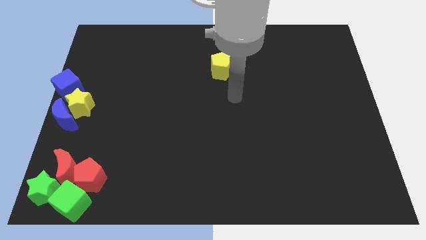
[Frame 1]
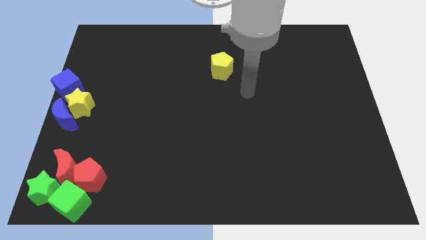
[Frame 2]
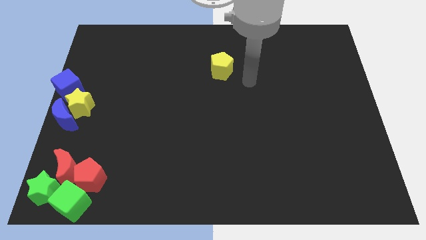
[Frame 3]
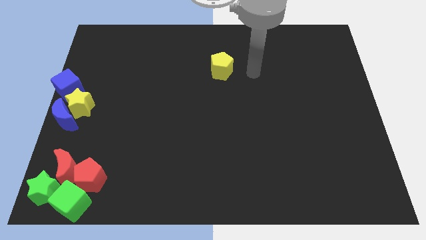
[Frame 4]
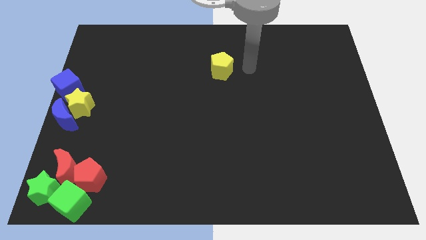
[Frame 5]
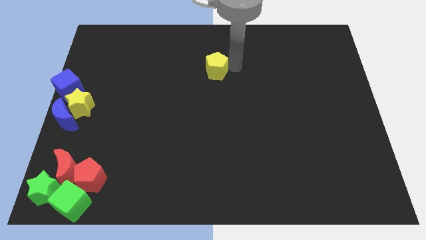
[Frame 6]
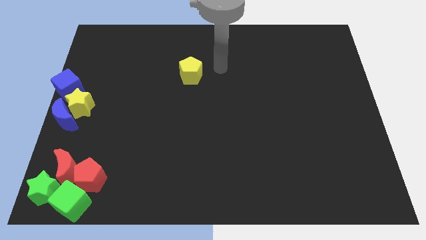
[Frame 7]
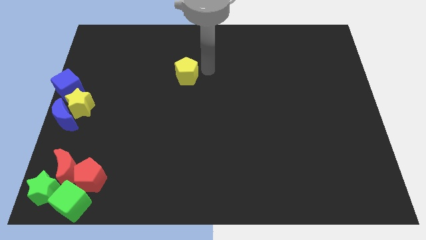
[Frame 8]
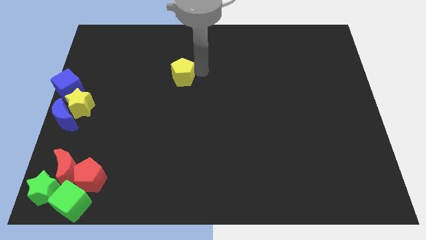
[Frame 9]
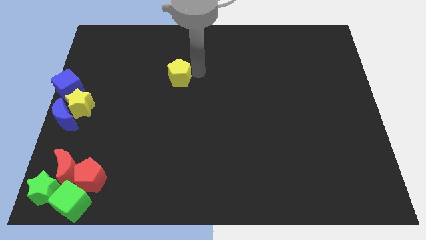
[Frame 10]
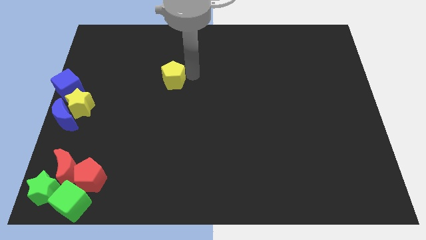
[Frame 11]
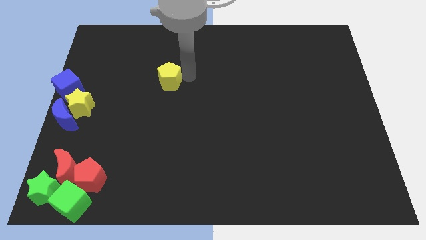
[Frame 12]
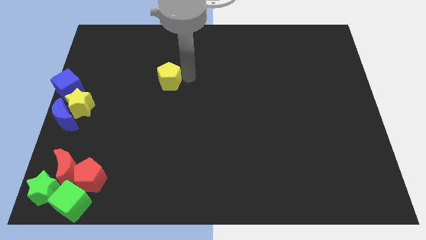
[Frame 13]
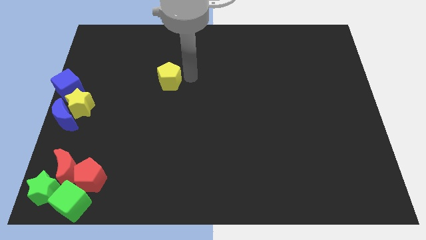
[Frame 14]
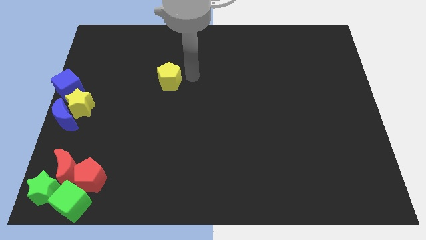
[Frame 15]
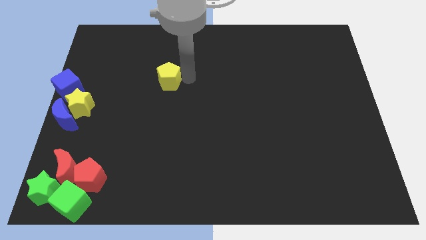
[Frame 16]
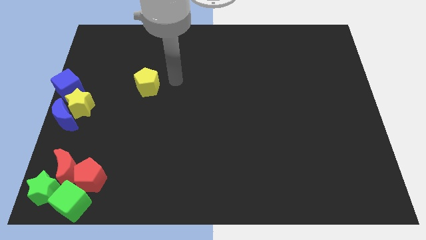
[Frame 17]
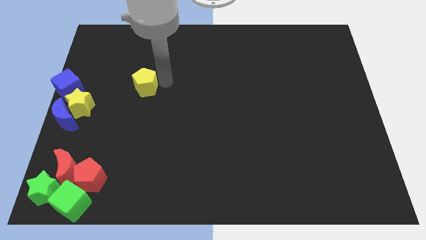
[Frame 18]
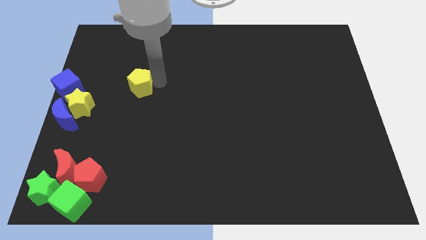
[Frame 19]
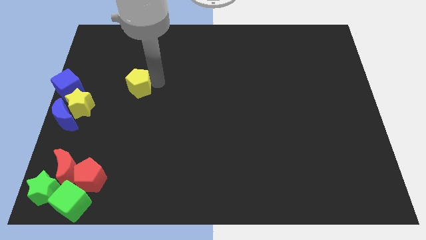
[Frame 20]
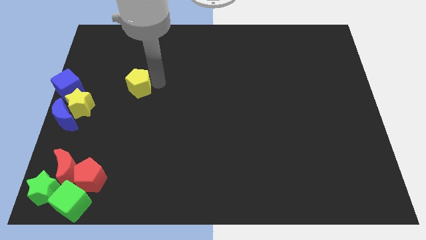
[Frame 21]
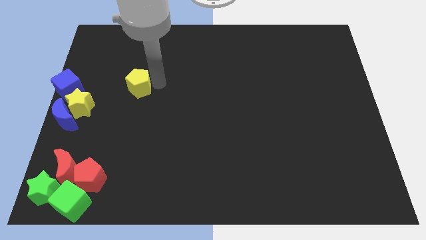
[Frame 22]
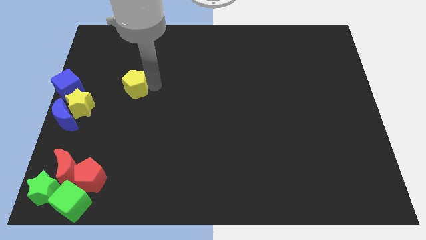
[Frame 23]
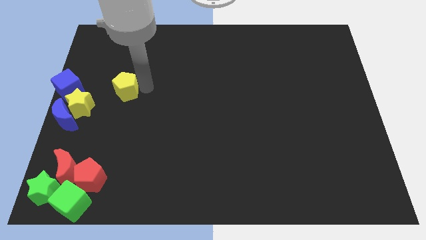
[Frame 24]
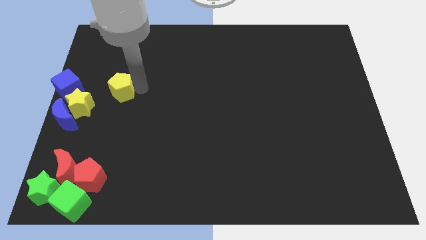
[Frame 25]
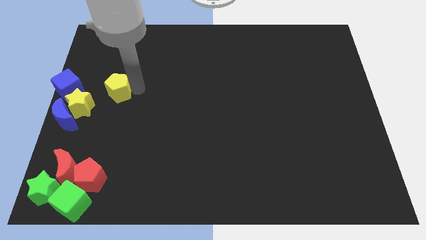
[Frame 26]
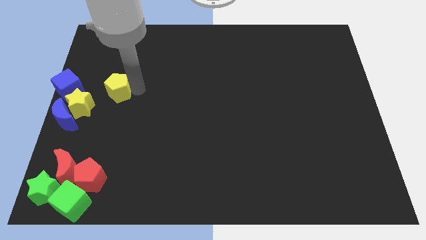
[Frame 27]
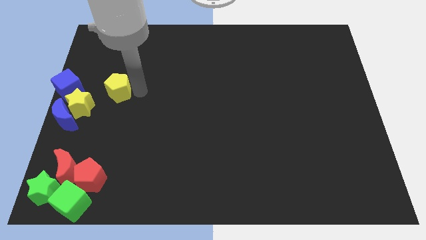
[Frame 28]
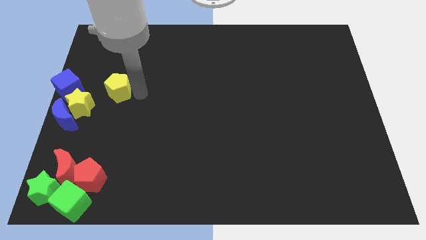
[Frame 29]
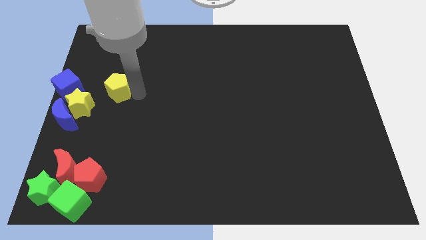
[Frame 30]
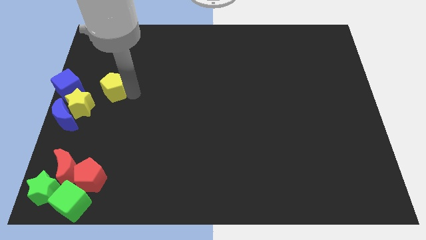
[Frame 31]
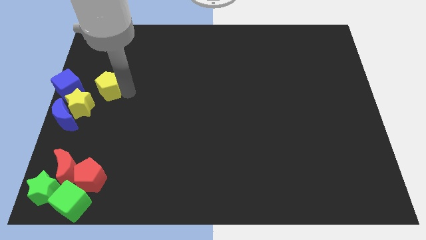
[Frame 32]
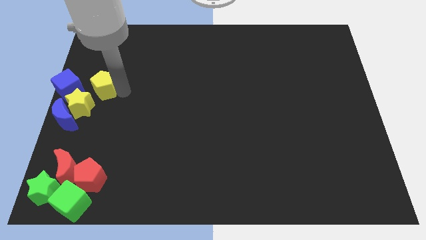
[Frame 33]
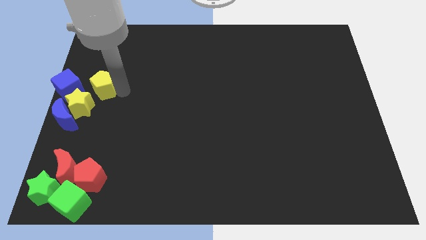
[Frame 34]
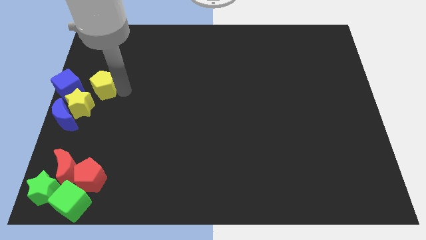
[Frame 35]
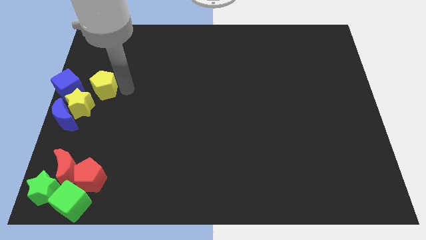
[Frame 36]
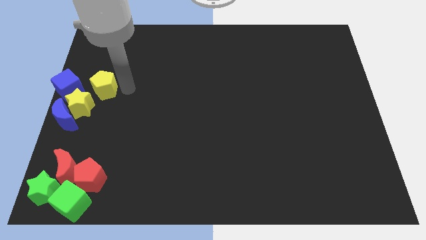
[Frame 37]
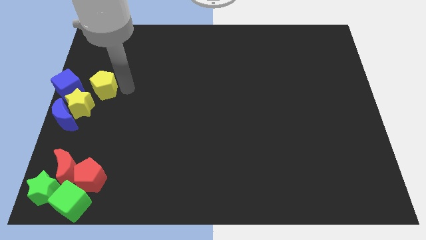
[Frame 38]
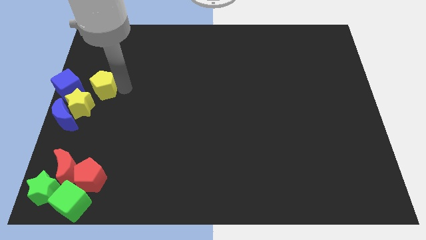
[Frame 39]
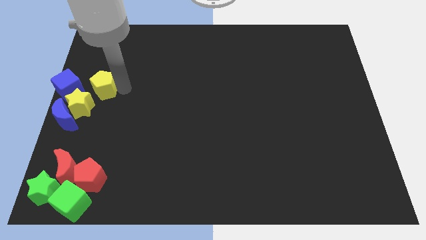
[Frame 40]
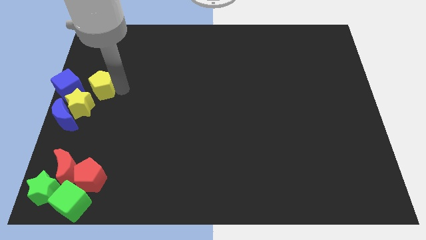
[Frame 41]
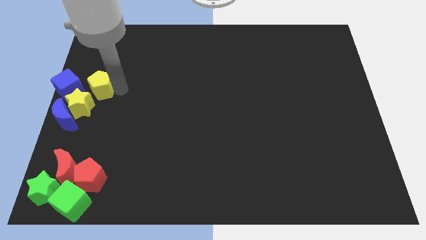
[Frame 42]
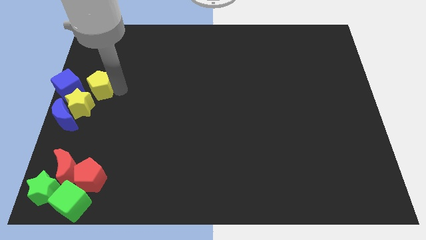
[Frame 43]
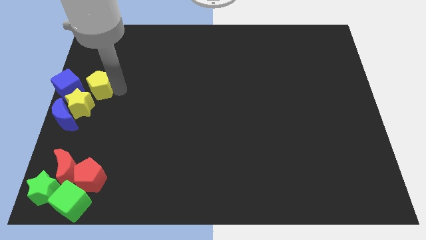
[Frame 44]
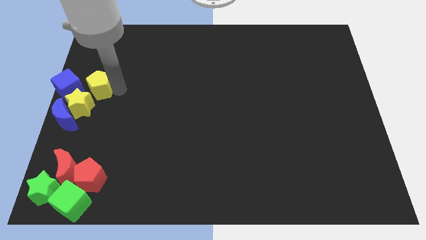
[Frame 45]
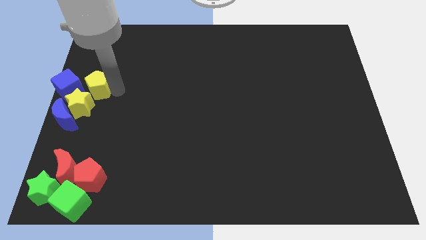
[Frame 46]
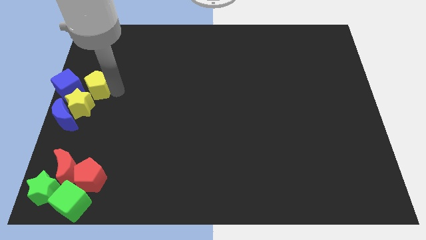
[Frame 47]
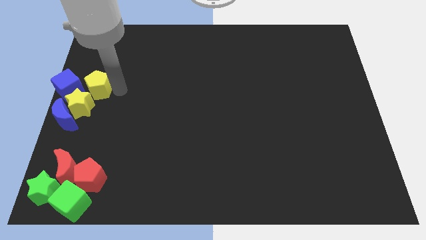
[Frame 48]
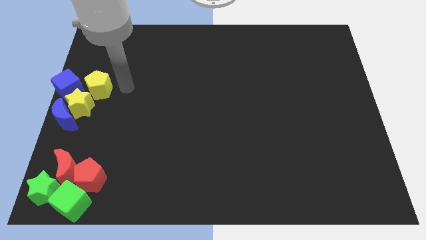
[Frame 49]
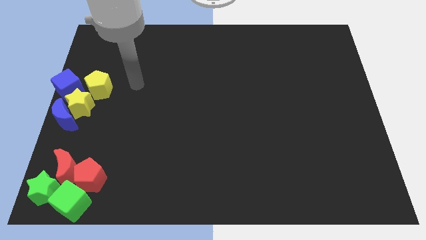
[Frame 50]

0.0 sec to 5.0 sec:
move the yellow pentagon to the top right of the yellow star

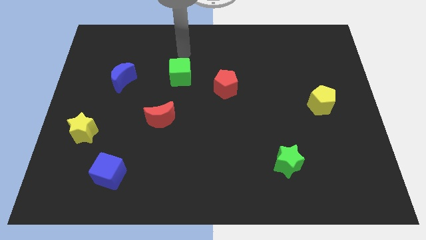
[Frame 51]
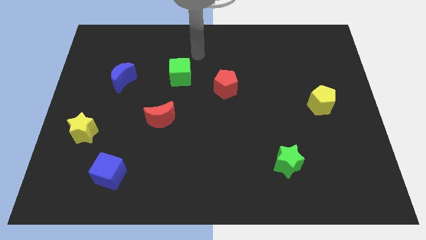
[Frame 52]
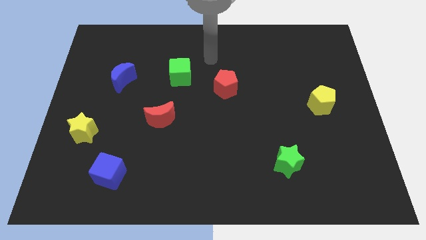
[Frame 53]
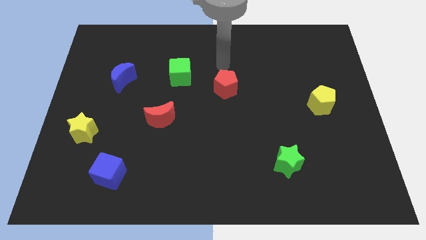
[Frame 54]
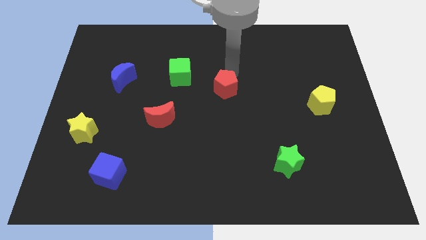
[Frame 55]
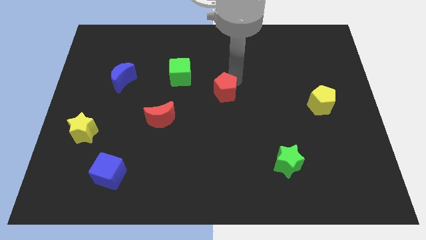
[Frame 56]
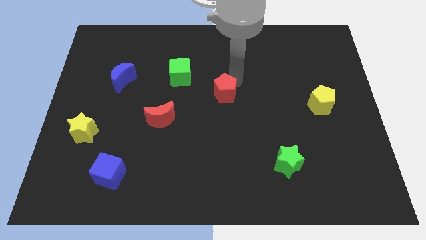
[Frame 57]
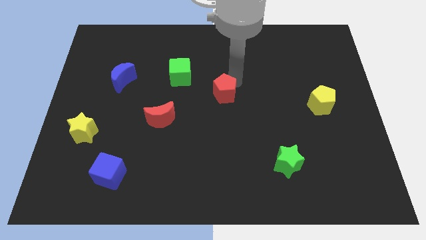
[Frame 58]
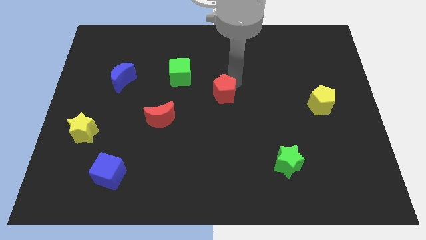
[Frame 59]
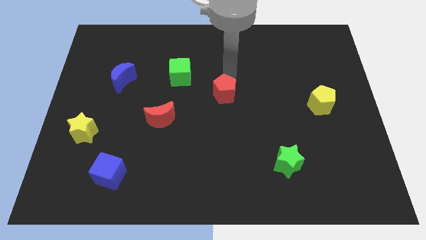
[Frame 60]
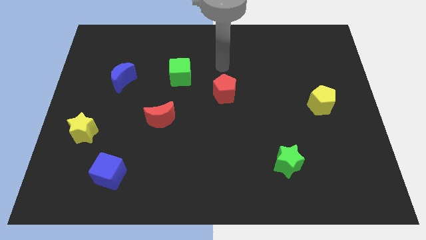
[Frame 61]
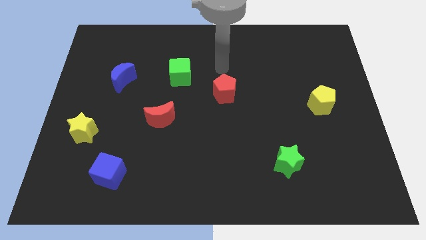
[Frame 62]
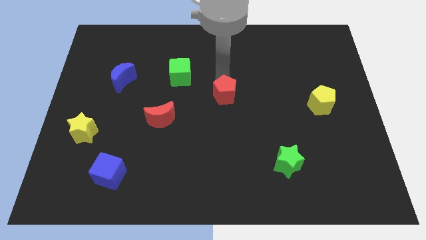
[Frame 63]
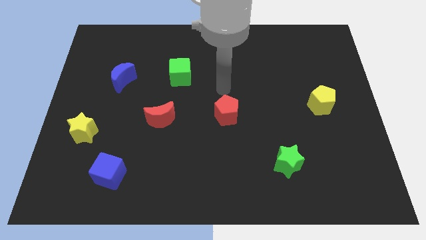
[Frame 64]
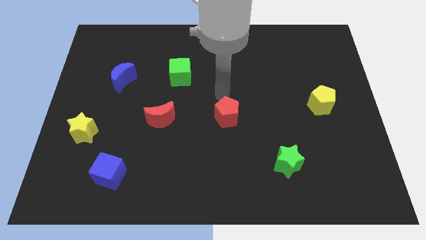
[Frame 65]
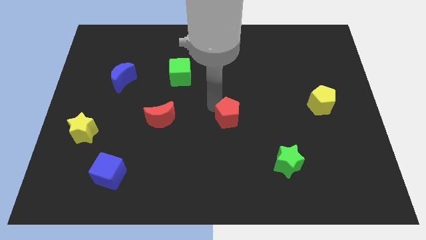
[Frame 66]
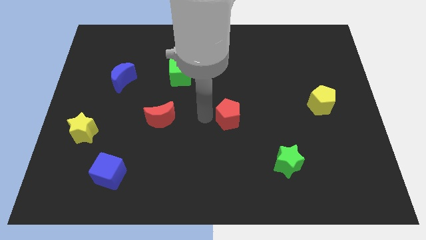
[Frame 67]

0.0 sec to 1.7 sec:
place the red pentagon to the right side of the red crescent

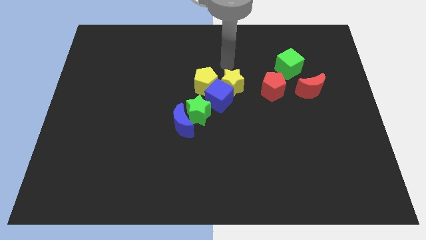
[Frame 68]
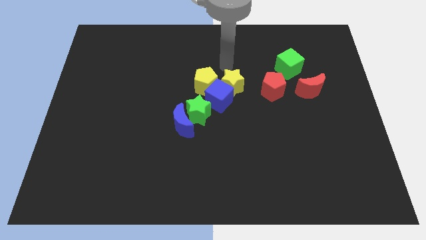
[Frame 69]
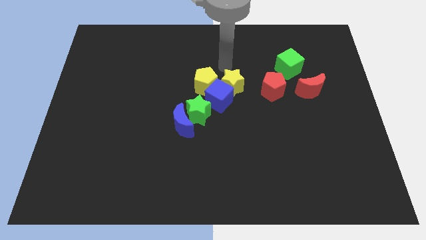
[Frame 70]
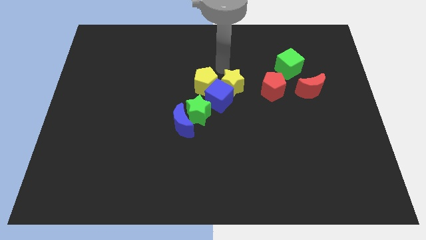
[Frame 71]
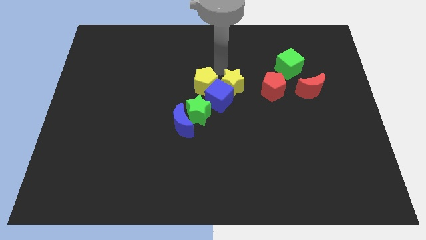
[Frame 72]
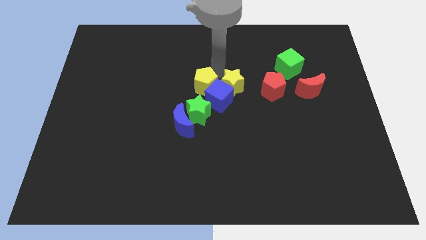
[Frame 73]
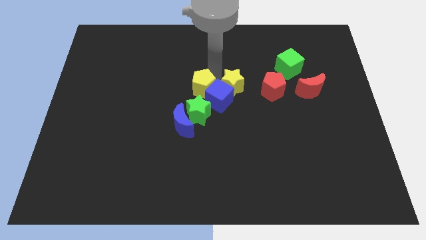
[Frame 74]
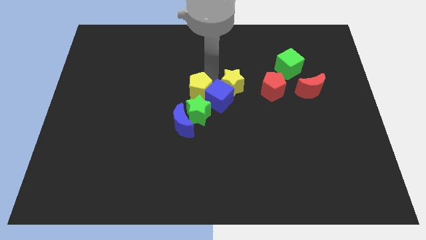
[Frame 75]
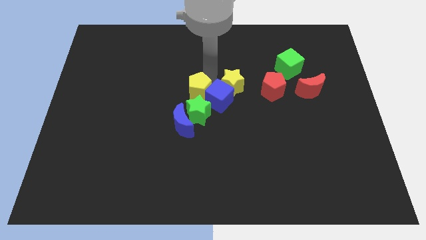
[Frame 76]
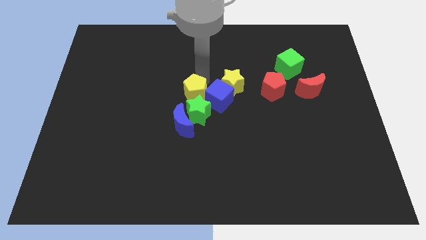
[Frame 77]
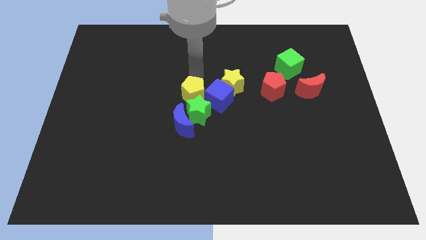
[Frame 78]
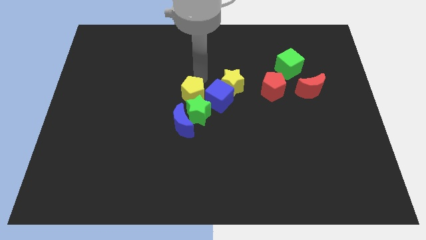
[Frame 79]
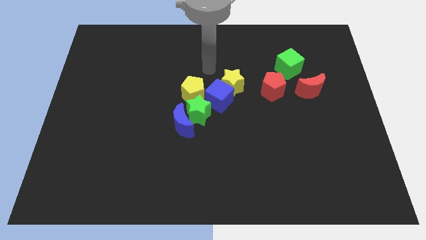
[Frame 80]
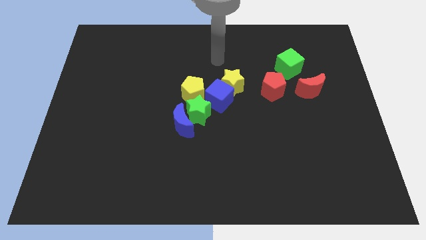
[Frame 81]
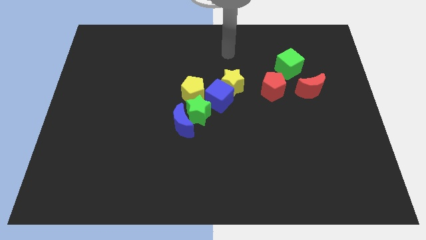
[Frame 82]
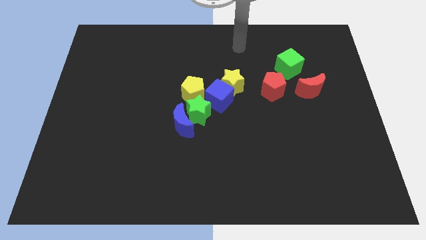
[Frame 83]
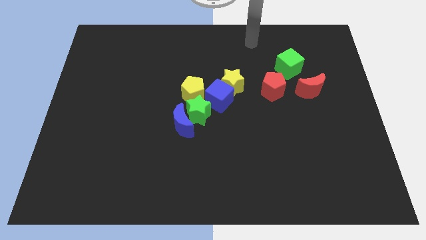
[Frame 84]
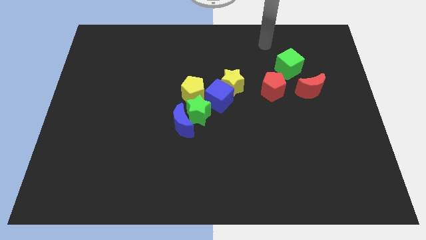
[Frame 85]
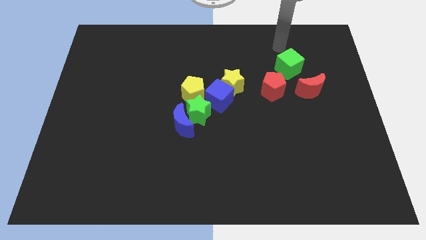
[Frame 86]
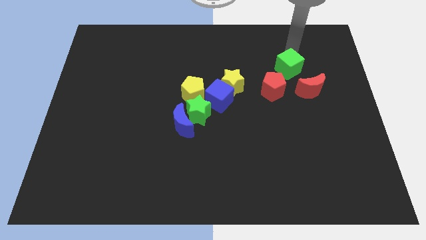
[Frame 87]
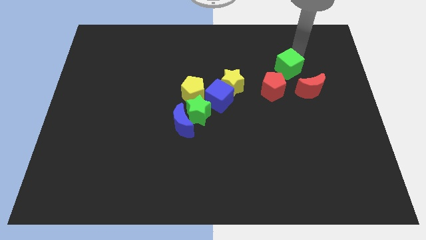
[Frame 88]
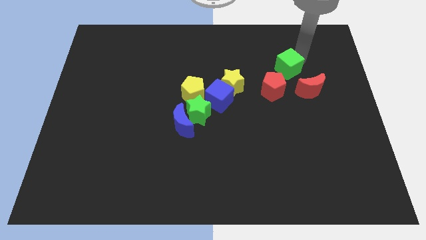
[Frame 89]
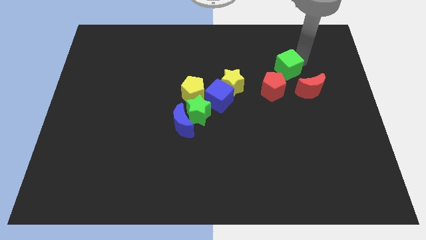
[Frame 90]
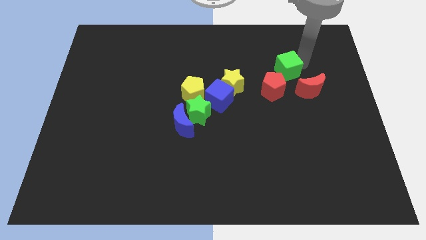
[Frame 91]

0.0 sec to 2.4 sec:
move the arm into the green cube
